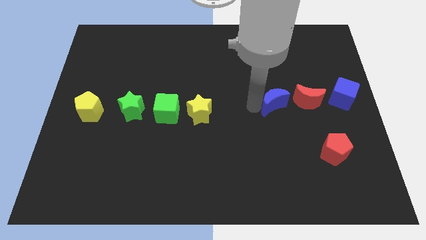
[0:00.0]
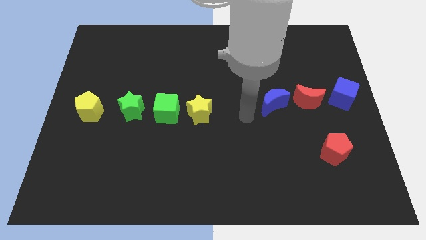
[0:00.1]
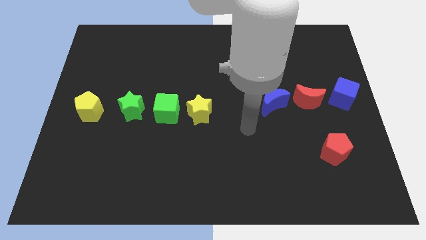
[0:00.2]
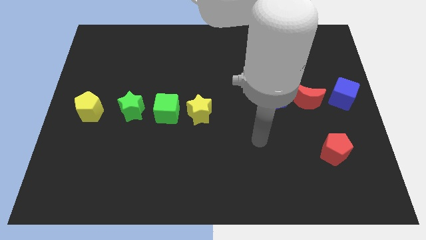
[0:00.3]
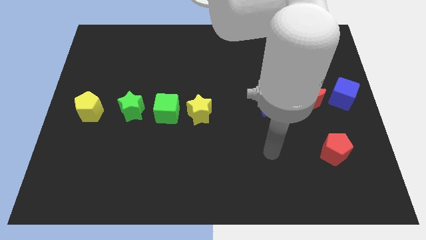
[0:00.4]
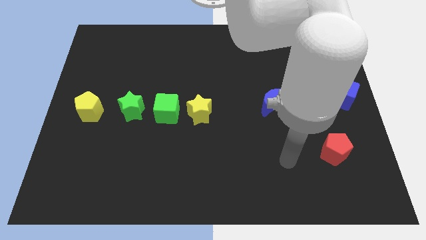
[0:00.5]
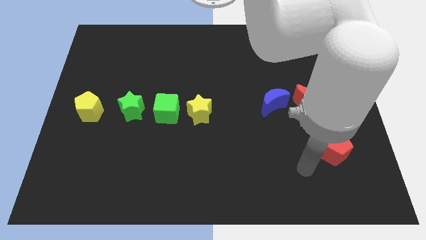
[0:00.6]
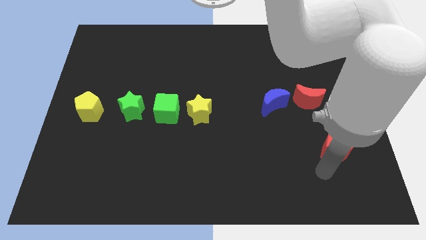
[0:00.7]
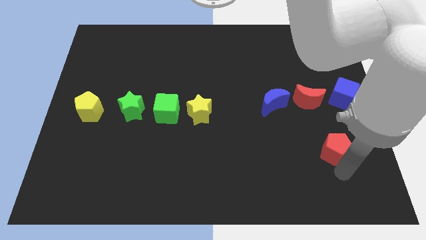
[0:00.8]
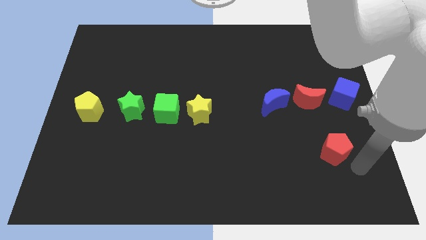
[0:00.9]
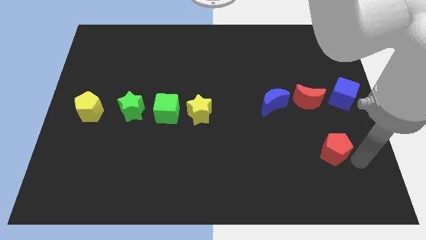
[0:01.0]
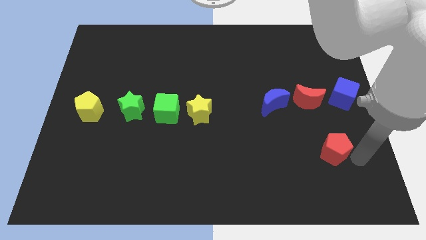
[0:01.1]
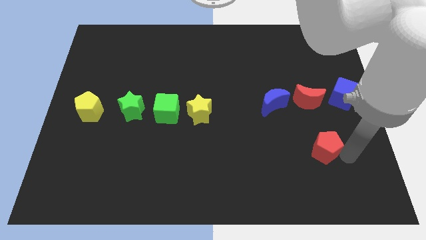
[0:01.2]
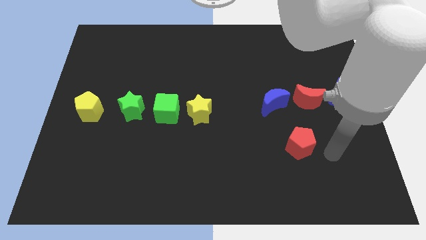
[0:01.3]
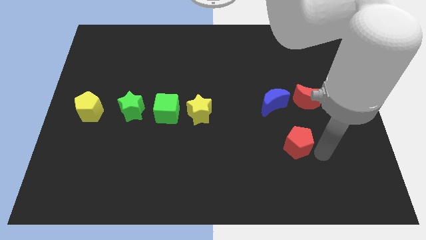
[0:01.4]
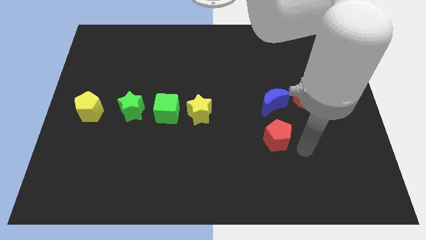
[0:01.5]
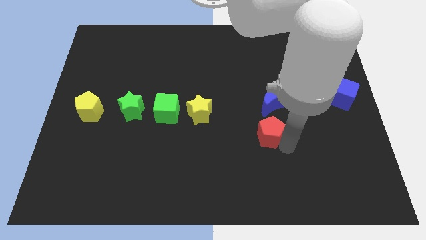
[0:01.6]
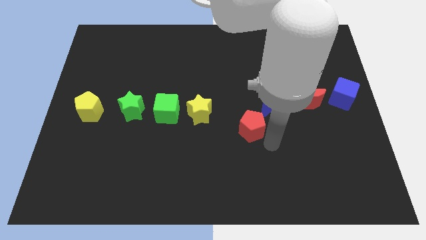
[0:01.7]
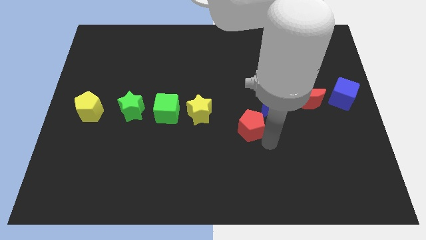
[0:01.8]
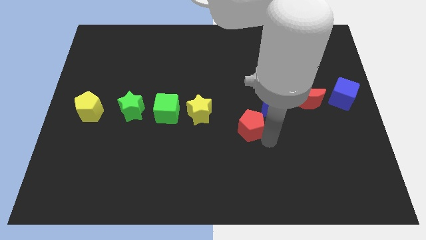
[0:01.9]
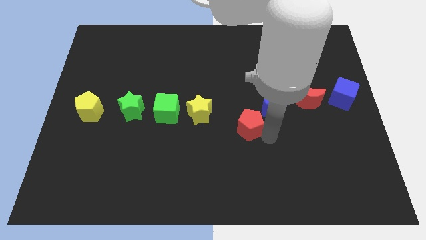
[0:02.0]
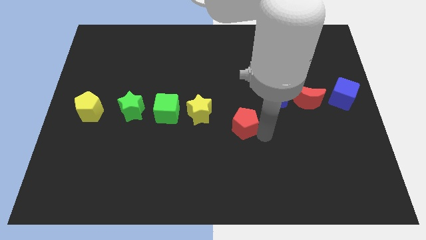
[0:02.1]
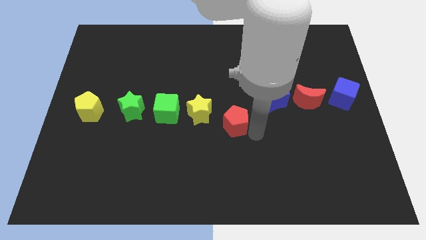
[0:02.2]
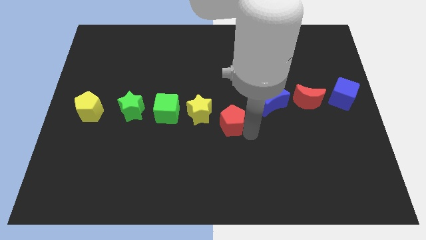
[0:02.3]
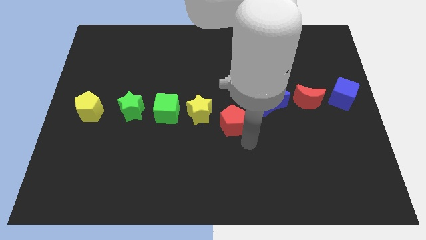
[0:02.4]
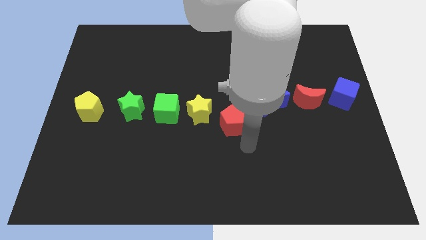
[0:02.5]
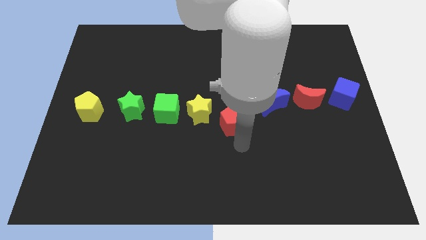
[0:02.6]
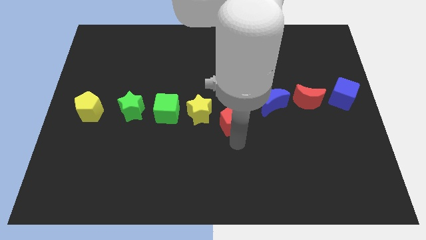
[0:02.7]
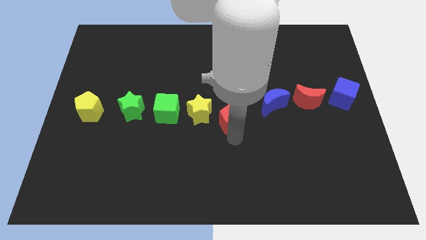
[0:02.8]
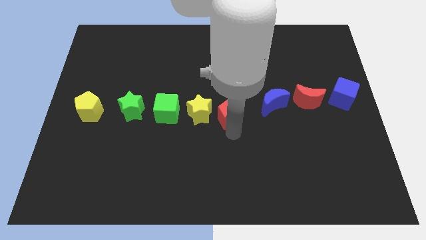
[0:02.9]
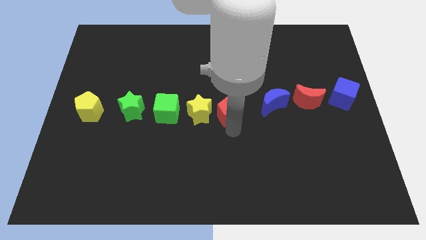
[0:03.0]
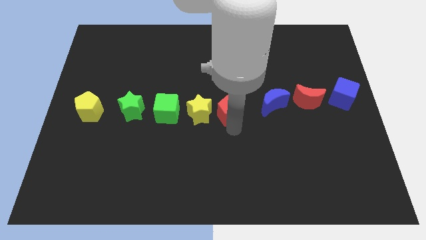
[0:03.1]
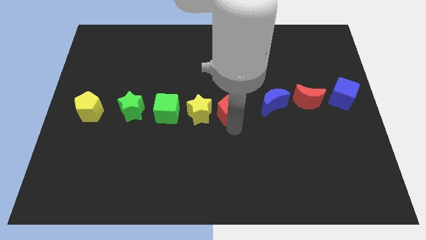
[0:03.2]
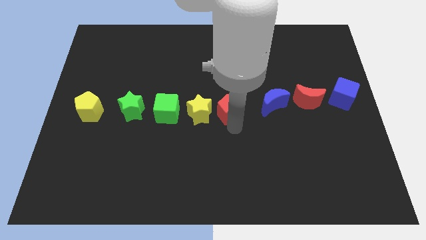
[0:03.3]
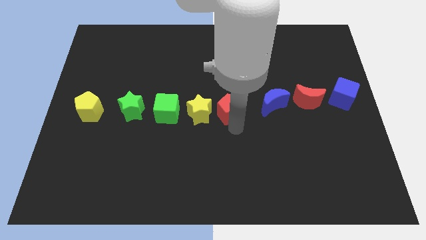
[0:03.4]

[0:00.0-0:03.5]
push the red pentagon right to the yellow star

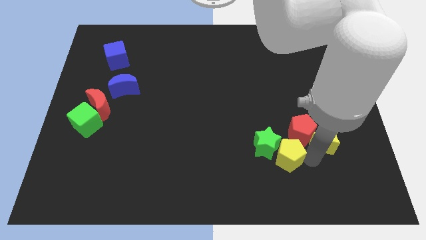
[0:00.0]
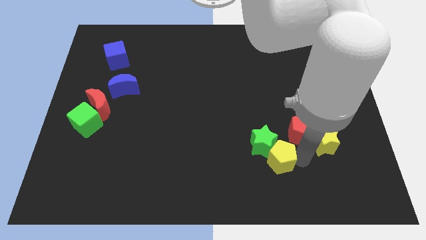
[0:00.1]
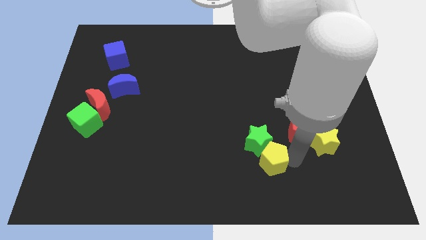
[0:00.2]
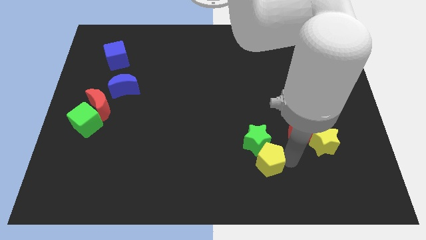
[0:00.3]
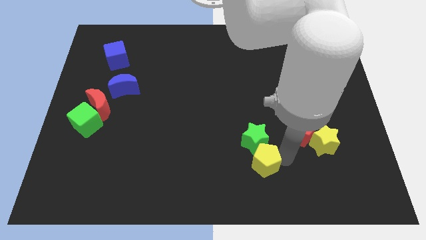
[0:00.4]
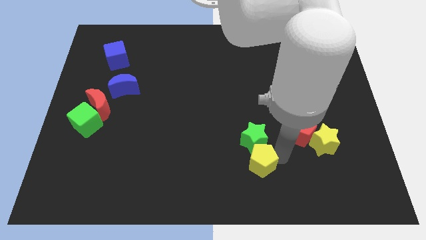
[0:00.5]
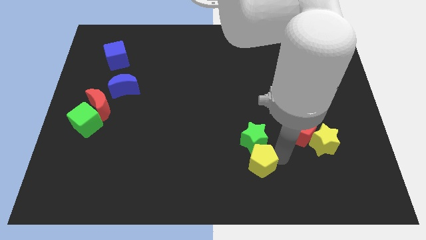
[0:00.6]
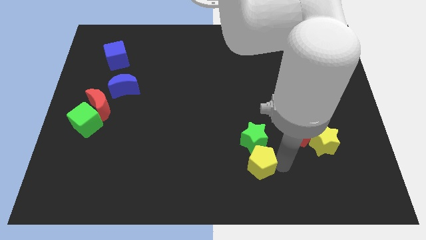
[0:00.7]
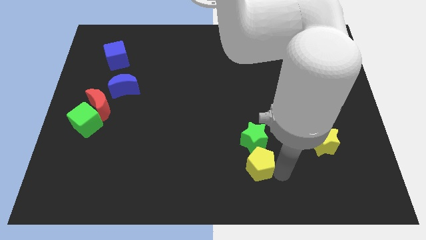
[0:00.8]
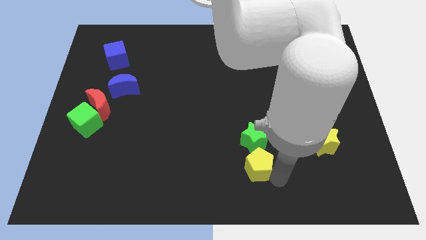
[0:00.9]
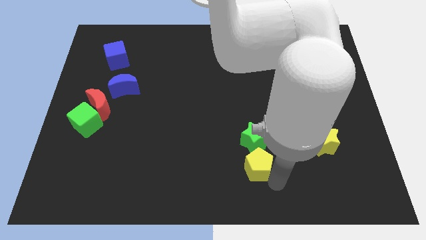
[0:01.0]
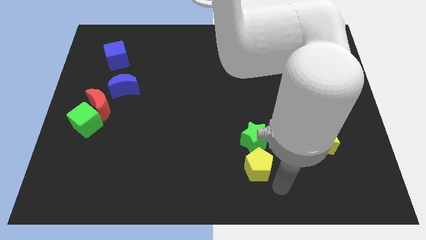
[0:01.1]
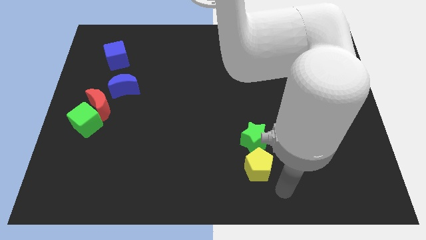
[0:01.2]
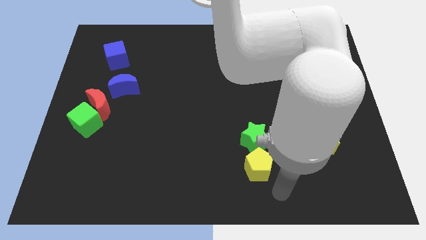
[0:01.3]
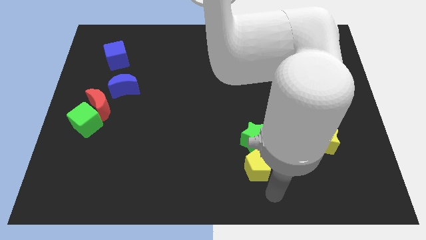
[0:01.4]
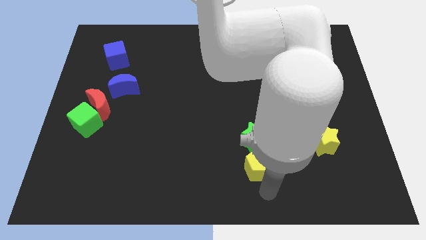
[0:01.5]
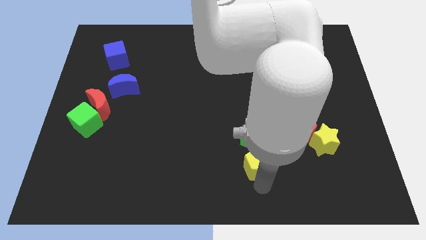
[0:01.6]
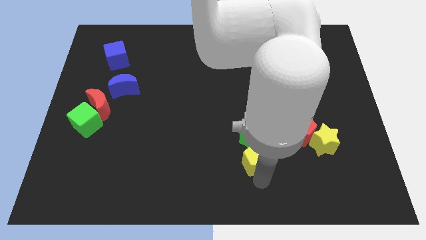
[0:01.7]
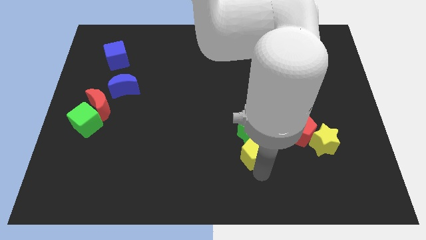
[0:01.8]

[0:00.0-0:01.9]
push the yellow pentagon into the green star

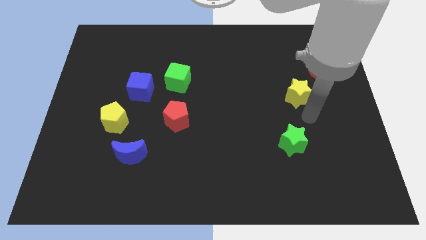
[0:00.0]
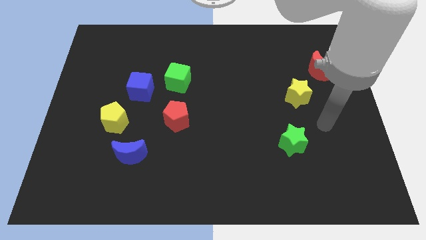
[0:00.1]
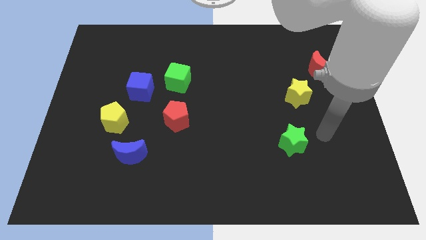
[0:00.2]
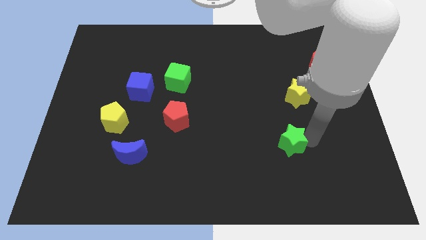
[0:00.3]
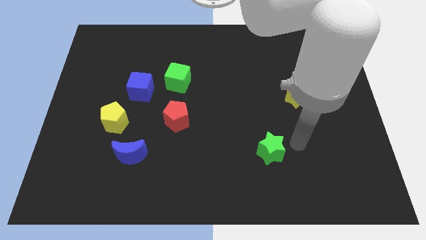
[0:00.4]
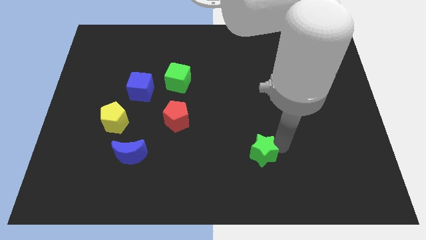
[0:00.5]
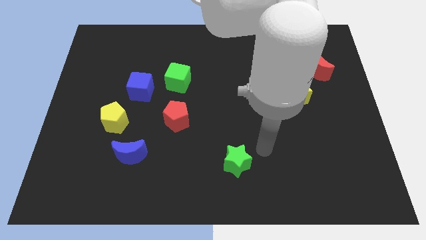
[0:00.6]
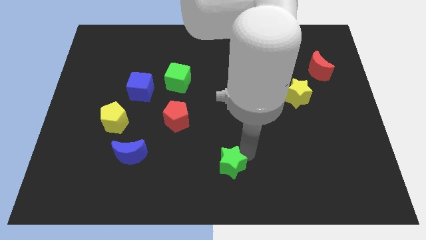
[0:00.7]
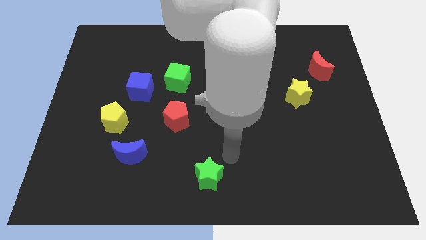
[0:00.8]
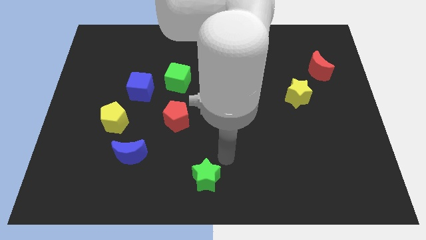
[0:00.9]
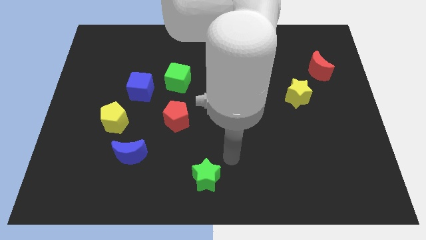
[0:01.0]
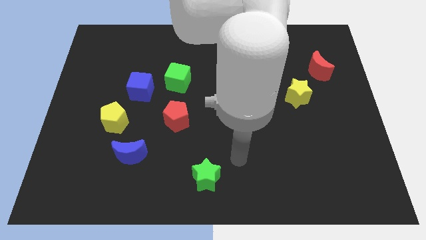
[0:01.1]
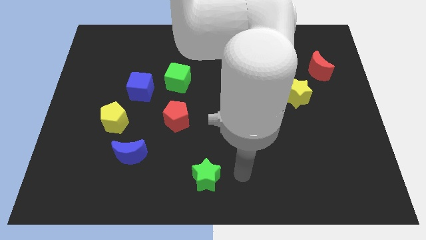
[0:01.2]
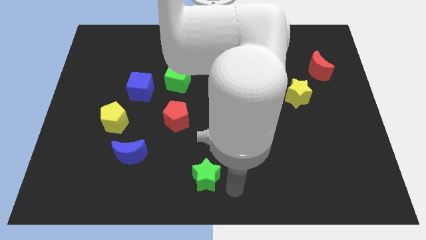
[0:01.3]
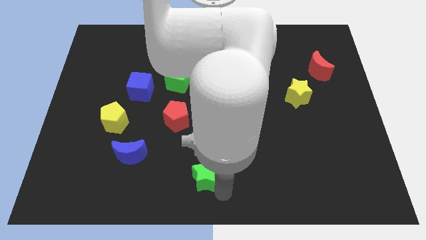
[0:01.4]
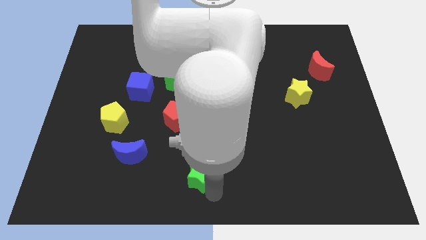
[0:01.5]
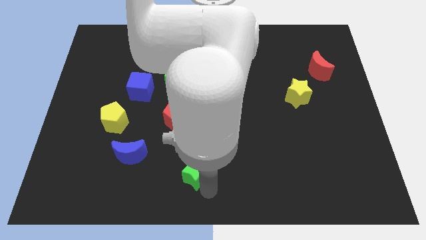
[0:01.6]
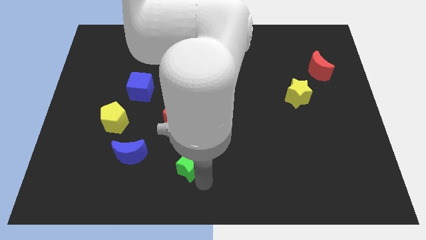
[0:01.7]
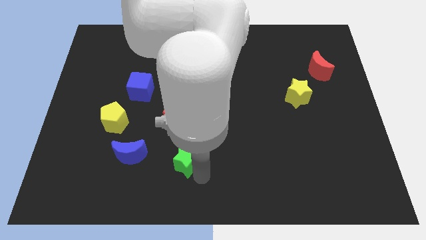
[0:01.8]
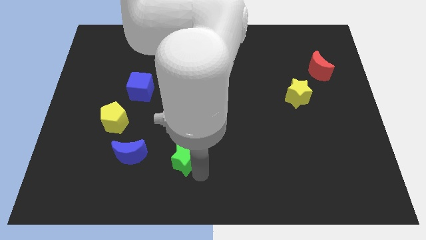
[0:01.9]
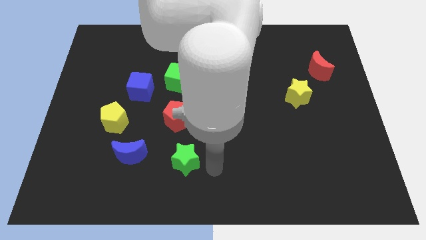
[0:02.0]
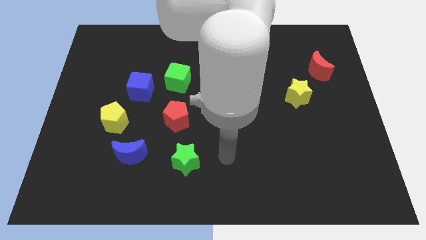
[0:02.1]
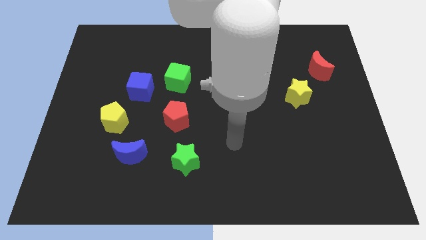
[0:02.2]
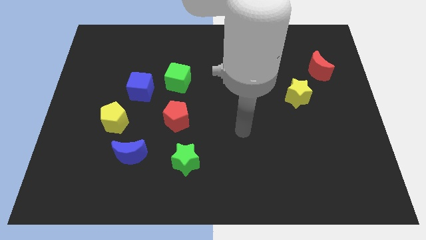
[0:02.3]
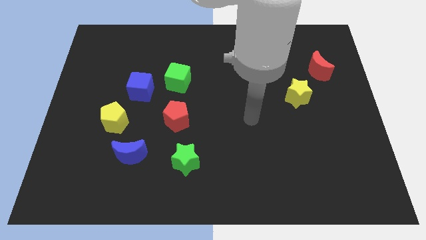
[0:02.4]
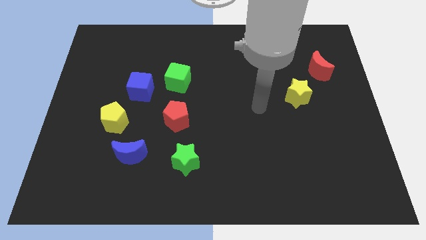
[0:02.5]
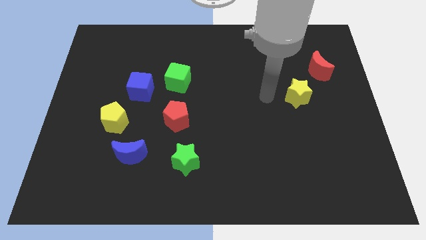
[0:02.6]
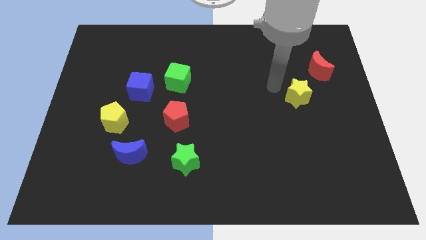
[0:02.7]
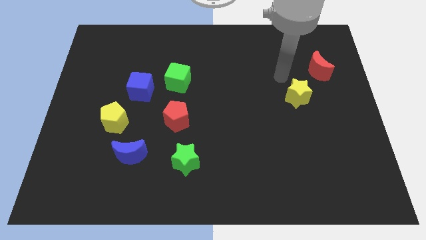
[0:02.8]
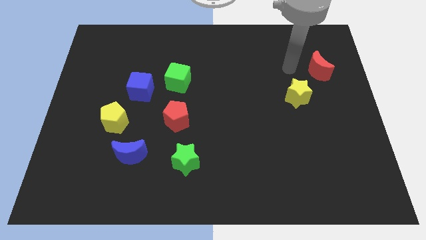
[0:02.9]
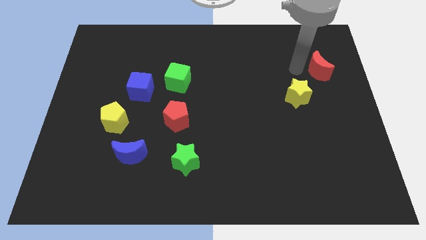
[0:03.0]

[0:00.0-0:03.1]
move the green star towards right of the blue crescent

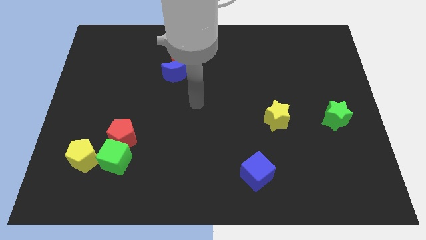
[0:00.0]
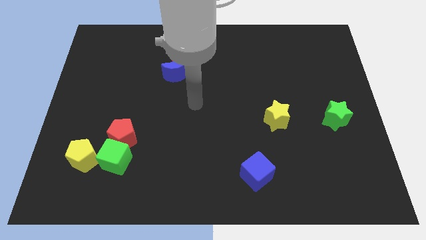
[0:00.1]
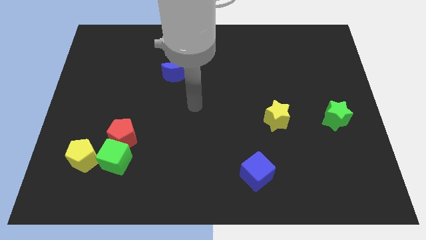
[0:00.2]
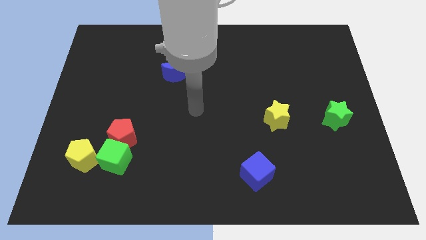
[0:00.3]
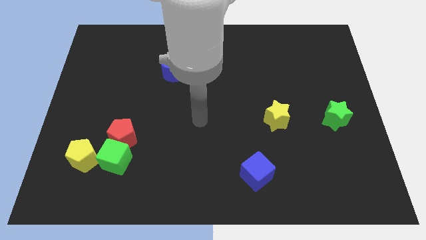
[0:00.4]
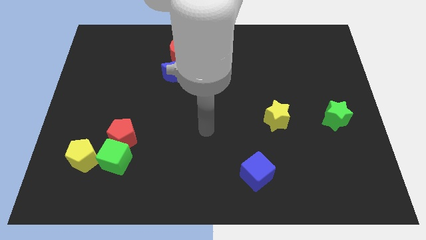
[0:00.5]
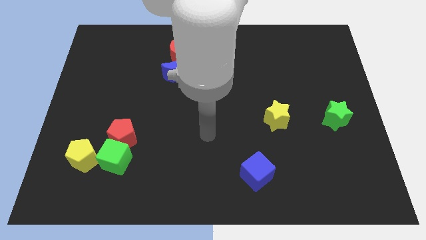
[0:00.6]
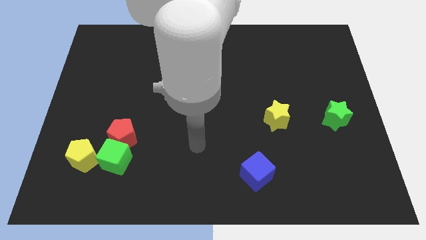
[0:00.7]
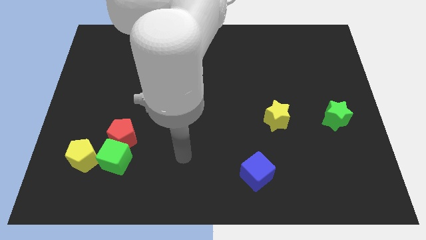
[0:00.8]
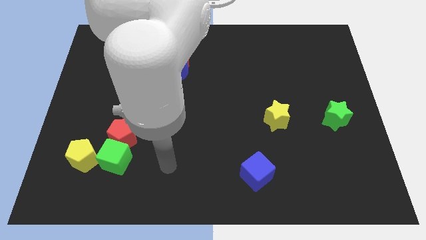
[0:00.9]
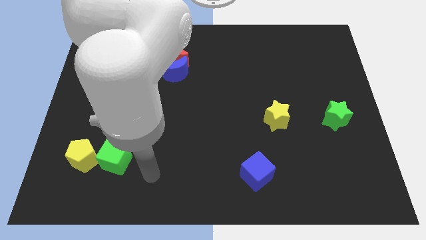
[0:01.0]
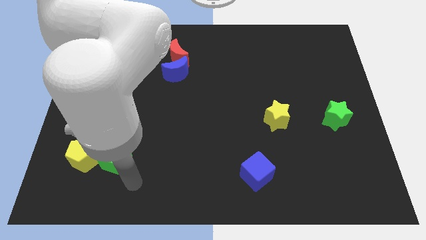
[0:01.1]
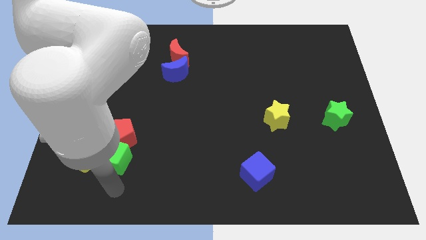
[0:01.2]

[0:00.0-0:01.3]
place your arm below the green cube
